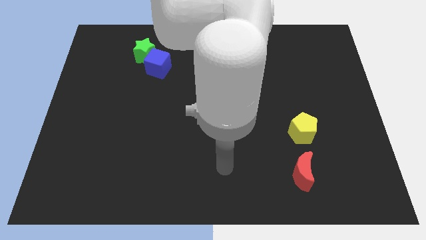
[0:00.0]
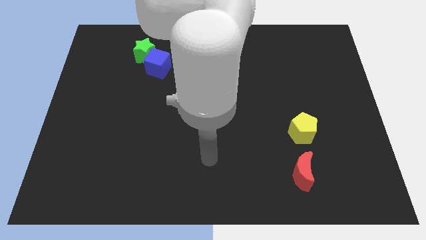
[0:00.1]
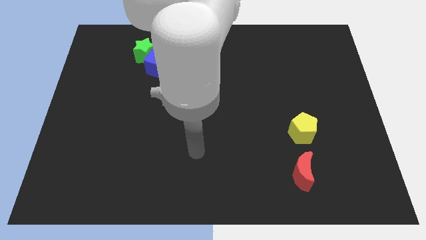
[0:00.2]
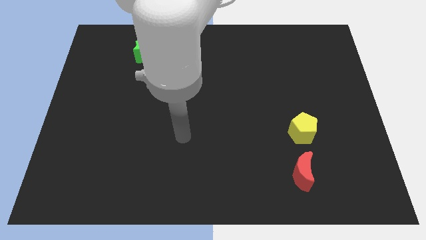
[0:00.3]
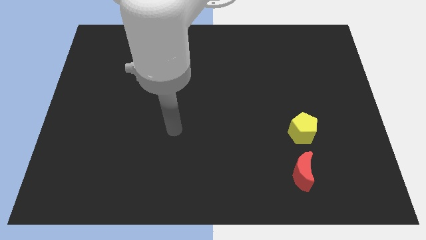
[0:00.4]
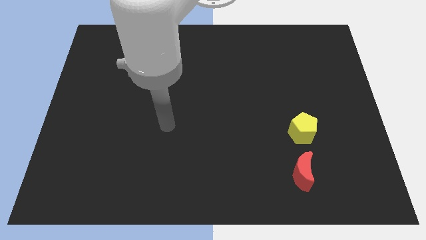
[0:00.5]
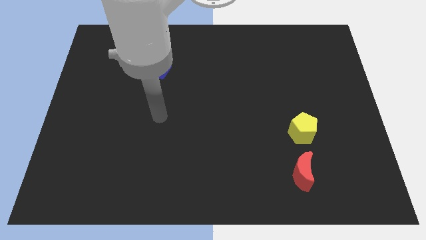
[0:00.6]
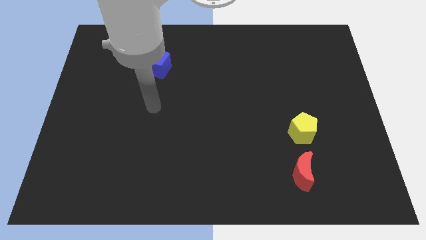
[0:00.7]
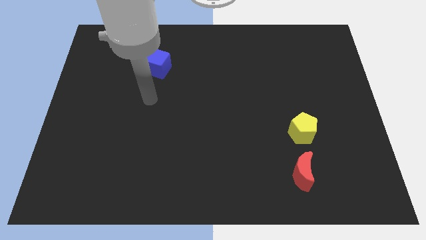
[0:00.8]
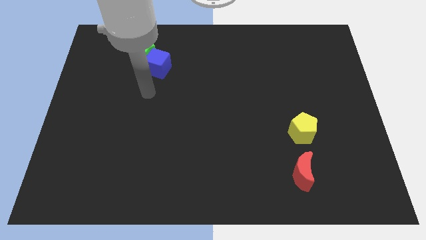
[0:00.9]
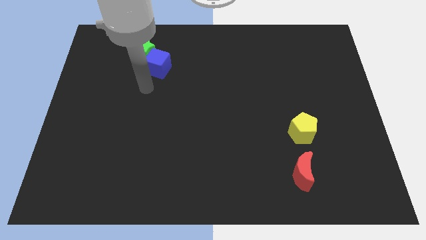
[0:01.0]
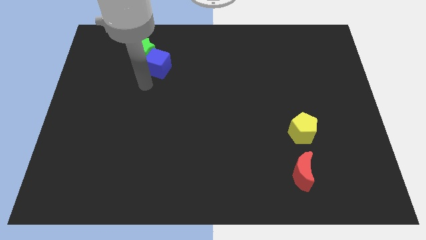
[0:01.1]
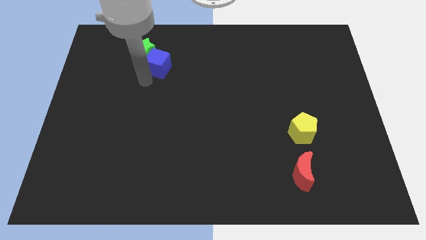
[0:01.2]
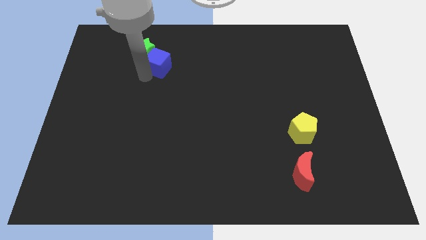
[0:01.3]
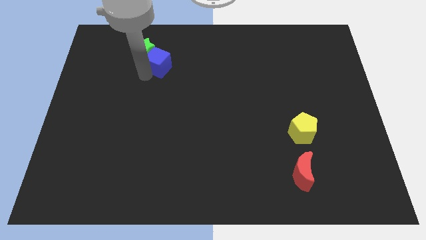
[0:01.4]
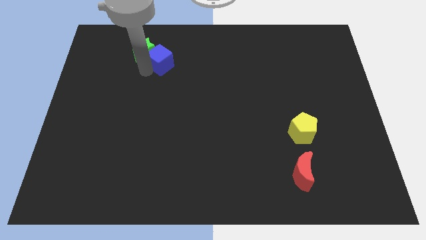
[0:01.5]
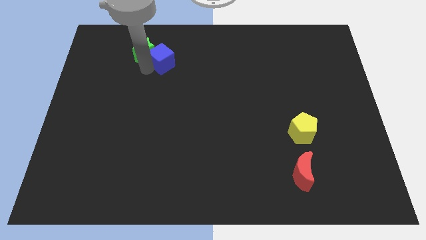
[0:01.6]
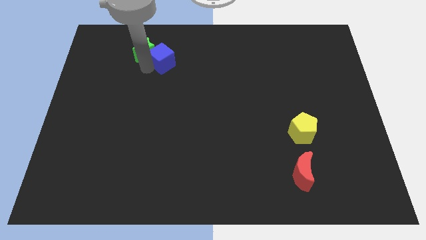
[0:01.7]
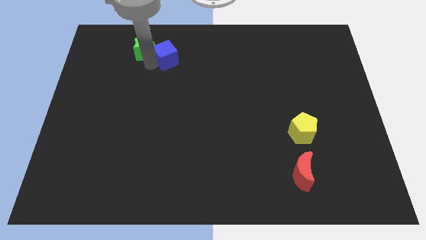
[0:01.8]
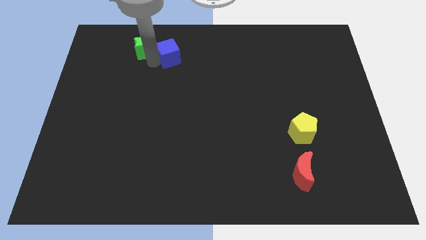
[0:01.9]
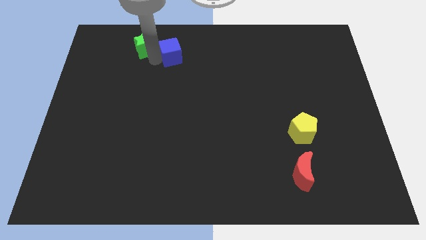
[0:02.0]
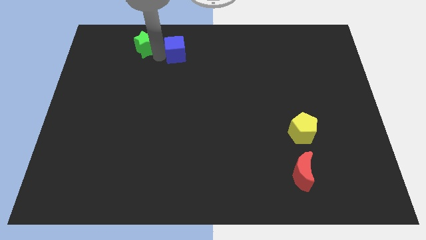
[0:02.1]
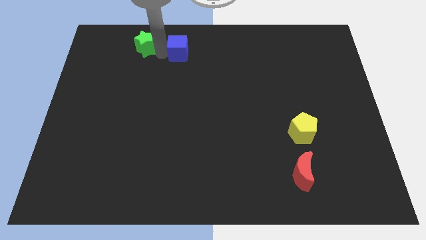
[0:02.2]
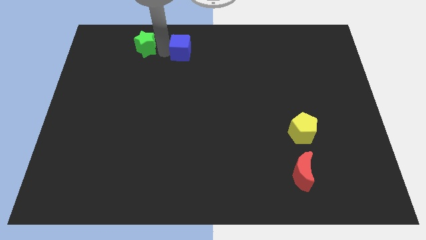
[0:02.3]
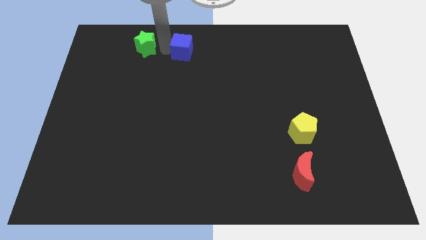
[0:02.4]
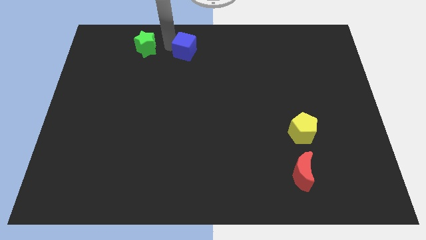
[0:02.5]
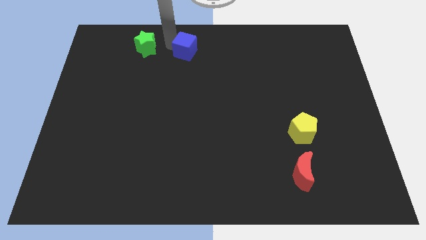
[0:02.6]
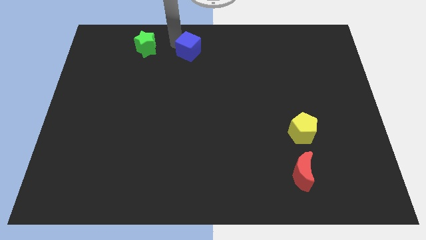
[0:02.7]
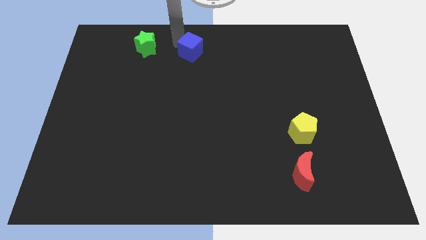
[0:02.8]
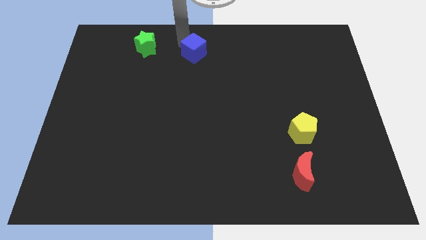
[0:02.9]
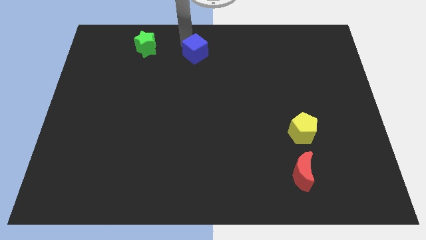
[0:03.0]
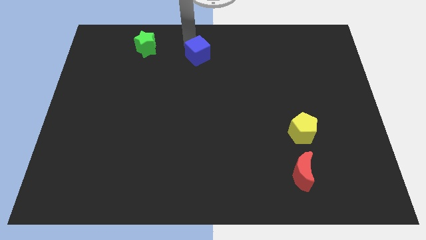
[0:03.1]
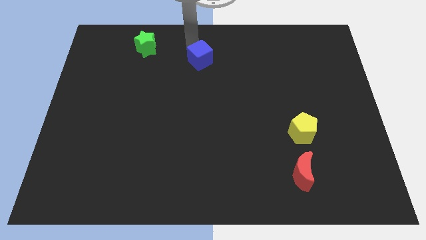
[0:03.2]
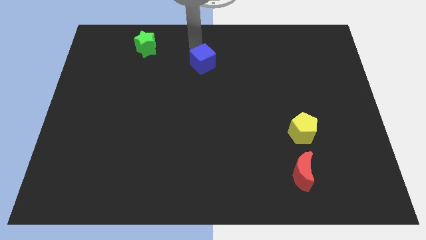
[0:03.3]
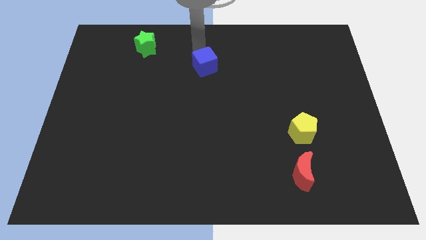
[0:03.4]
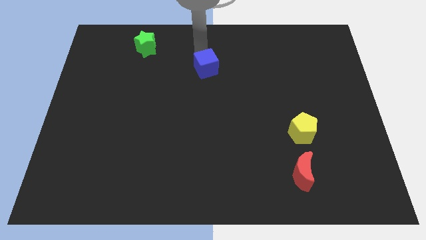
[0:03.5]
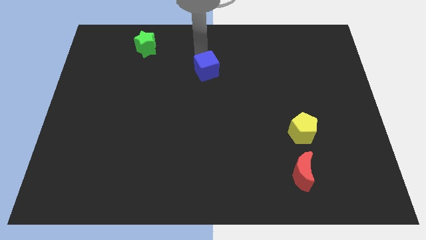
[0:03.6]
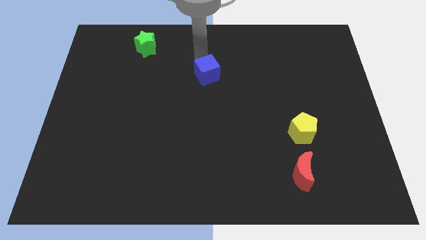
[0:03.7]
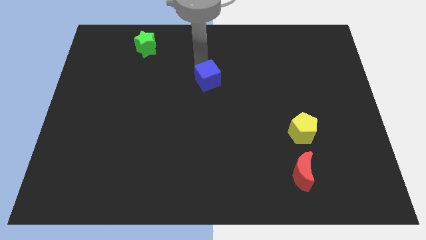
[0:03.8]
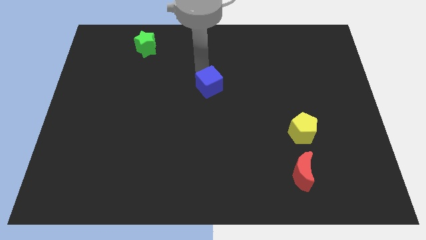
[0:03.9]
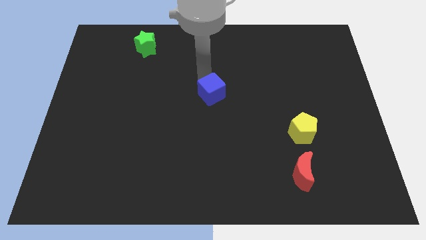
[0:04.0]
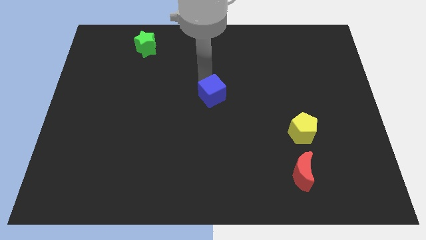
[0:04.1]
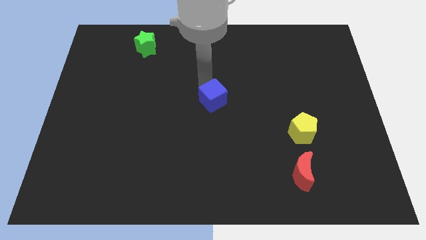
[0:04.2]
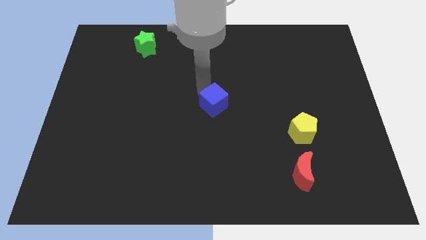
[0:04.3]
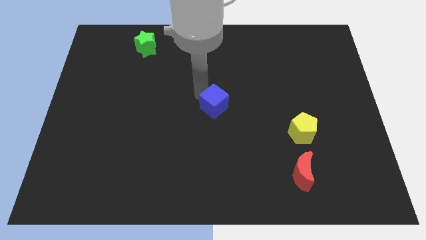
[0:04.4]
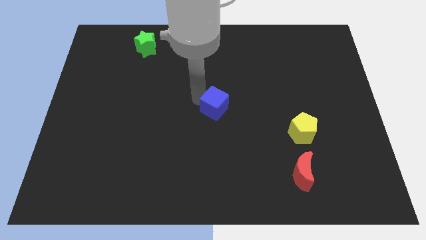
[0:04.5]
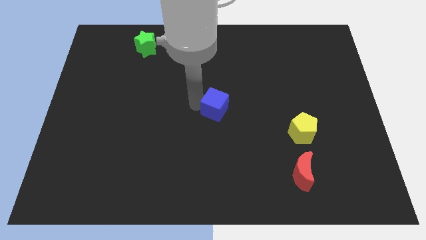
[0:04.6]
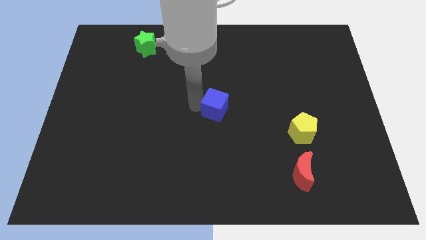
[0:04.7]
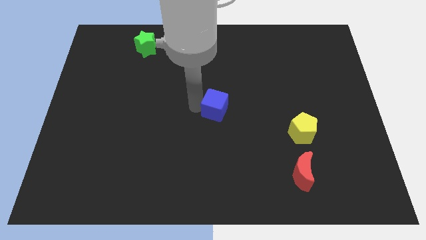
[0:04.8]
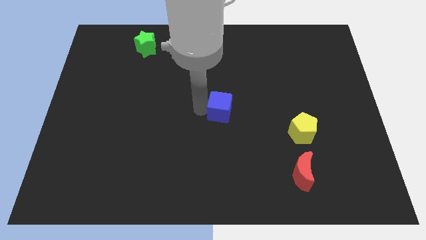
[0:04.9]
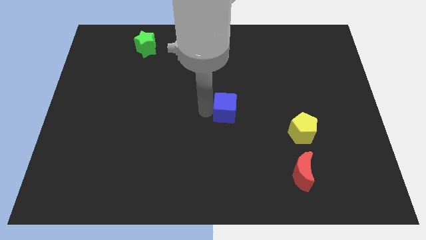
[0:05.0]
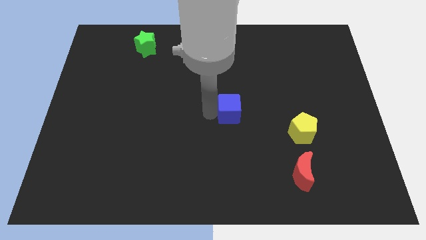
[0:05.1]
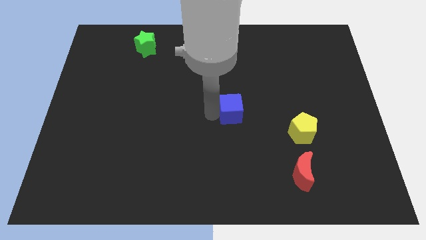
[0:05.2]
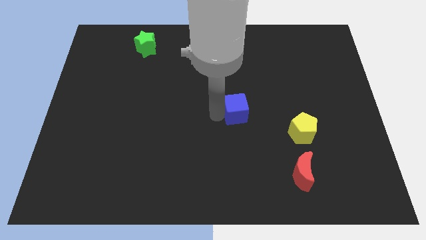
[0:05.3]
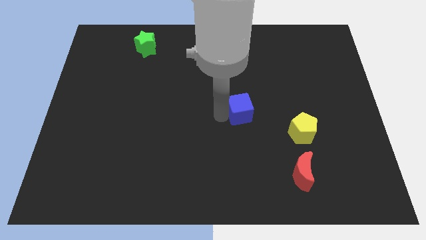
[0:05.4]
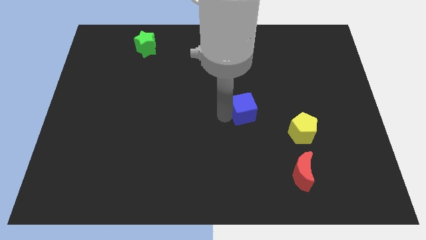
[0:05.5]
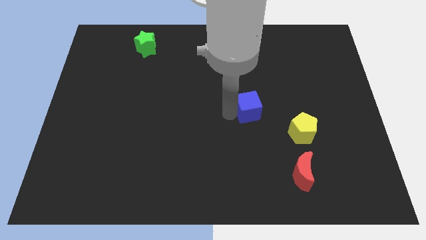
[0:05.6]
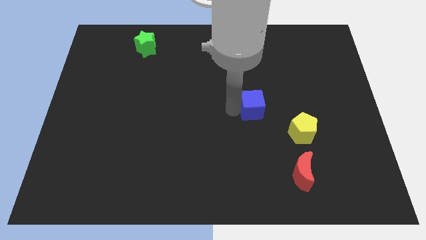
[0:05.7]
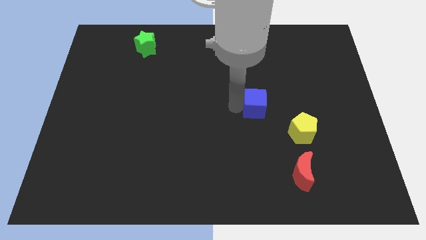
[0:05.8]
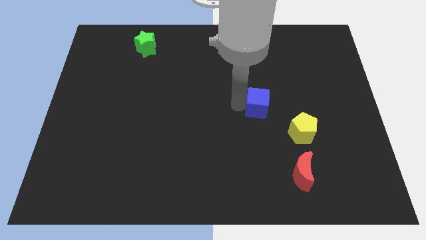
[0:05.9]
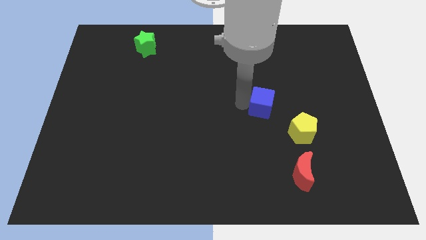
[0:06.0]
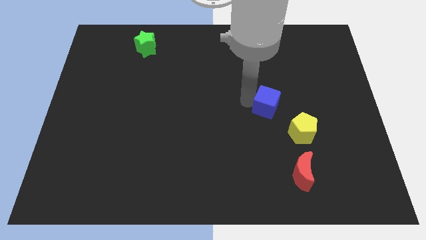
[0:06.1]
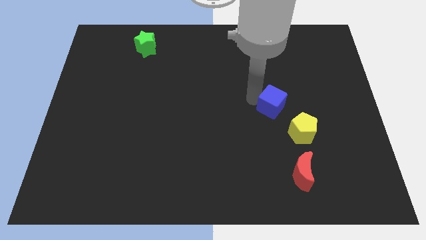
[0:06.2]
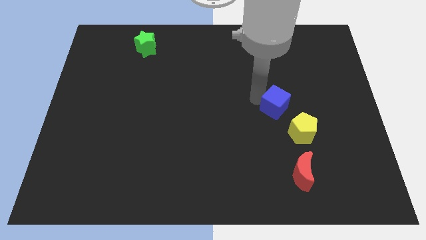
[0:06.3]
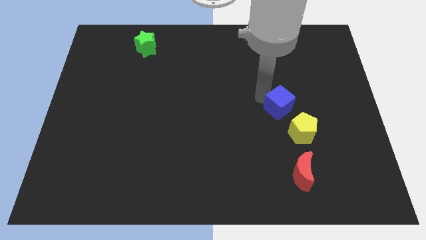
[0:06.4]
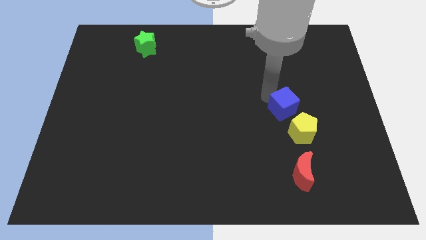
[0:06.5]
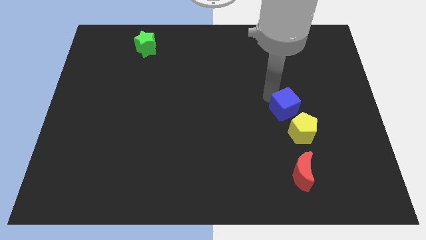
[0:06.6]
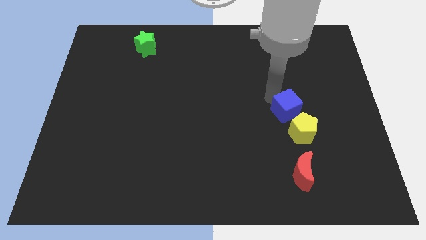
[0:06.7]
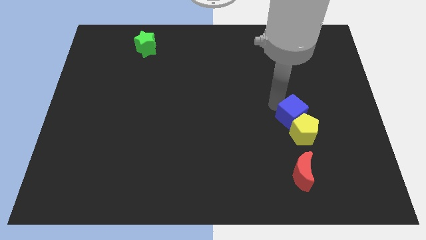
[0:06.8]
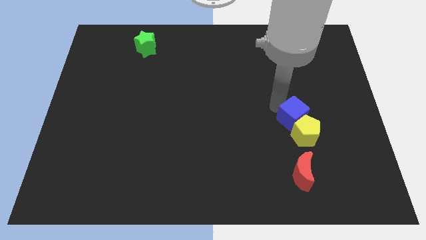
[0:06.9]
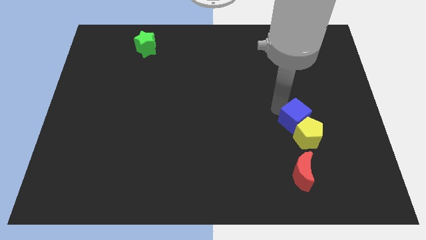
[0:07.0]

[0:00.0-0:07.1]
slide the blue block close to the pentagon

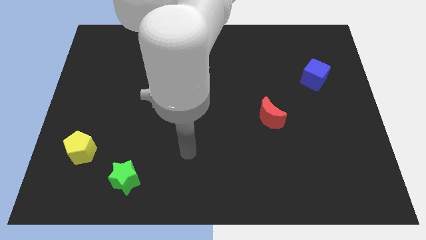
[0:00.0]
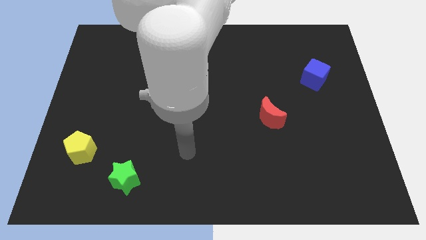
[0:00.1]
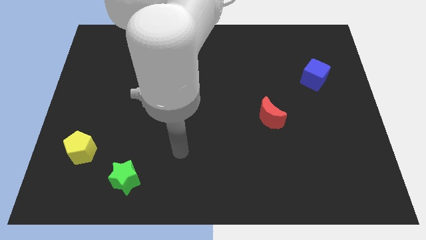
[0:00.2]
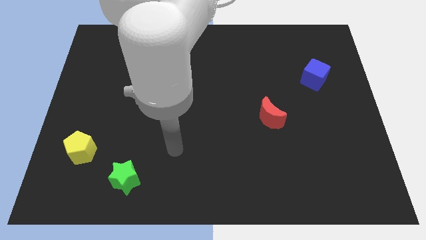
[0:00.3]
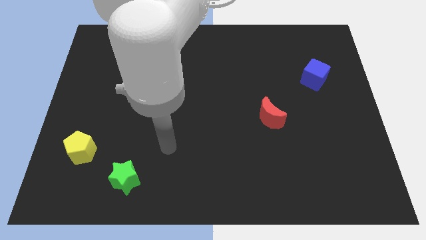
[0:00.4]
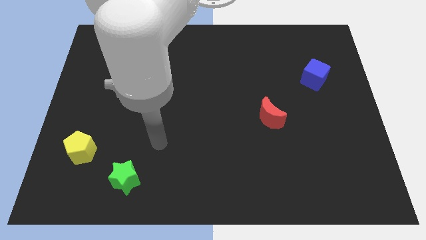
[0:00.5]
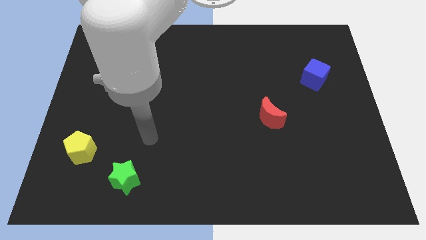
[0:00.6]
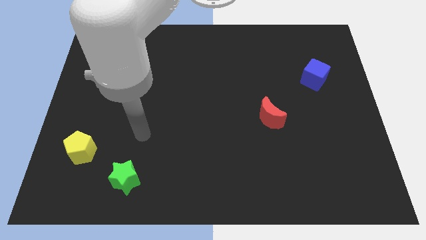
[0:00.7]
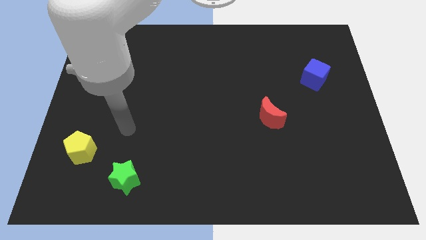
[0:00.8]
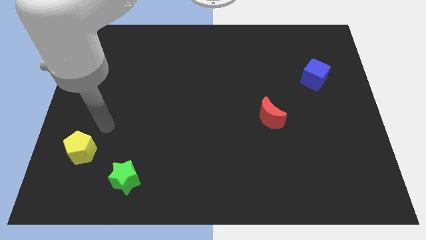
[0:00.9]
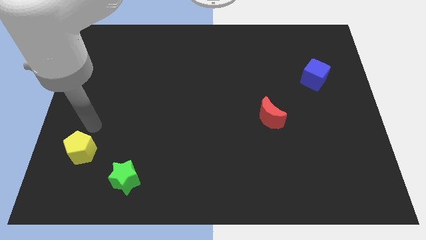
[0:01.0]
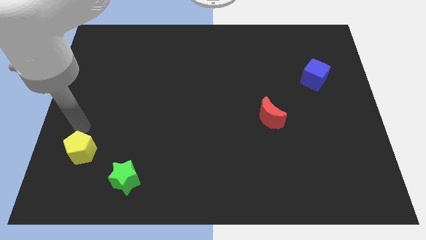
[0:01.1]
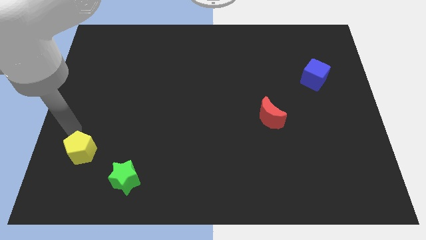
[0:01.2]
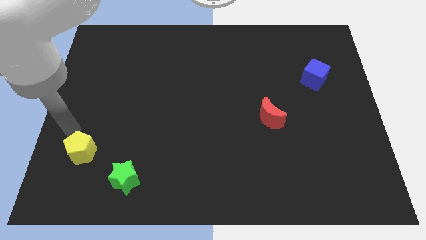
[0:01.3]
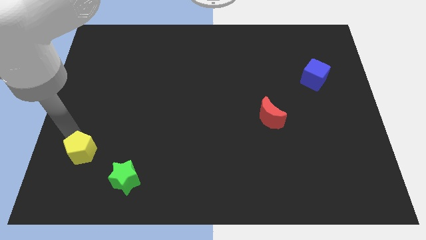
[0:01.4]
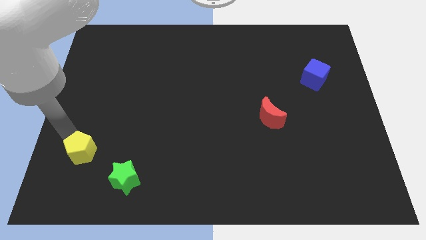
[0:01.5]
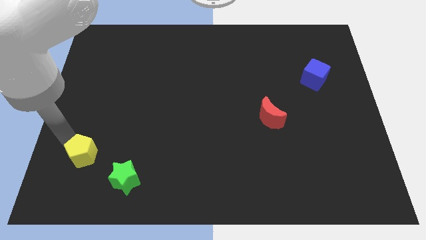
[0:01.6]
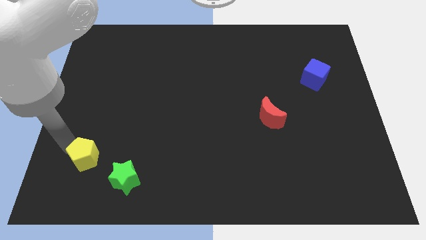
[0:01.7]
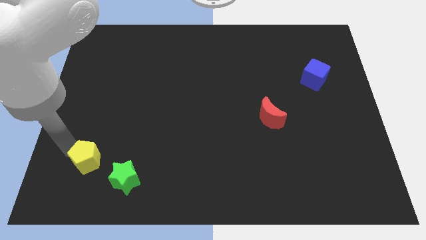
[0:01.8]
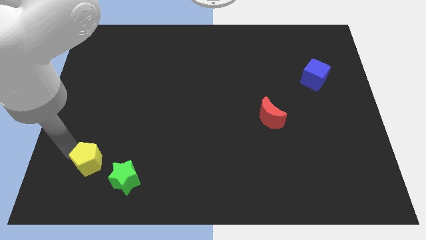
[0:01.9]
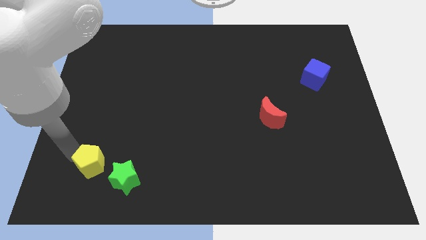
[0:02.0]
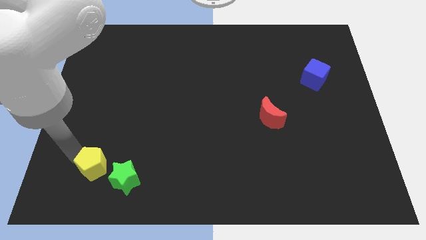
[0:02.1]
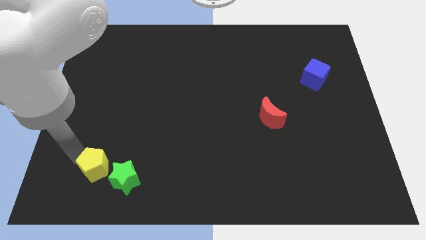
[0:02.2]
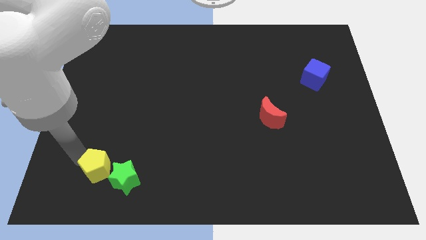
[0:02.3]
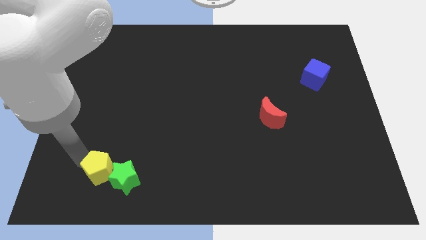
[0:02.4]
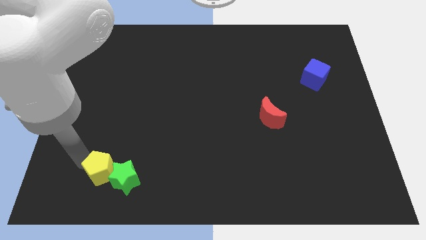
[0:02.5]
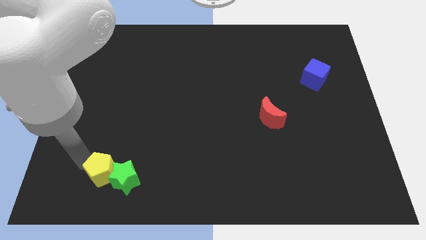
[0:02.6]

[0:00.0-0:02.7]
put the pentagon to the green star
